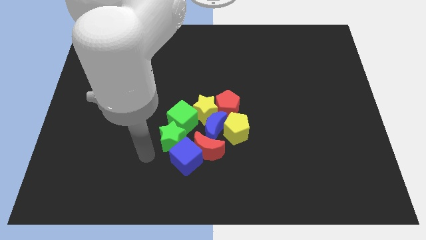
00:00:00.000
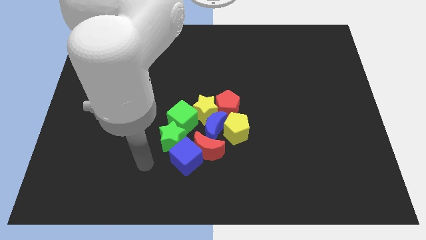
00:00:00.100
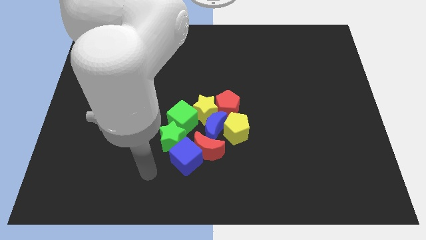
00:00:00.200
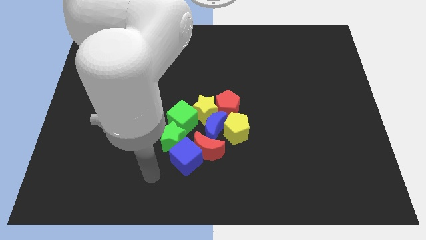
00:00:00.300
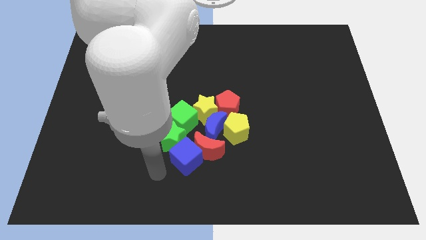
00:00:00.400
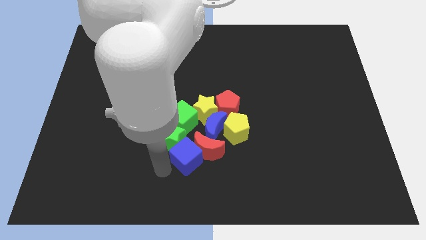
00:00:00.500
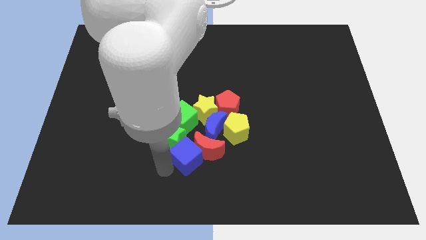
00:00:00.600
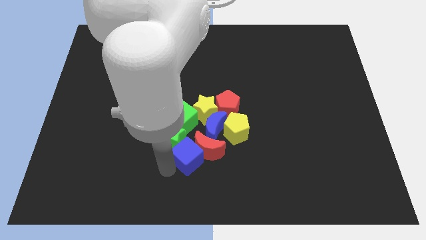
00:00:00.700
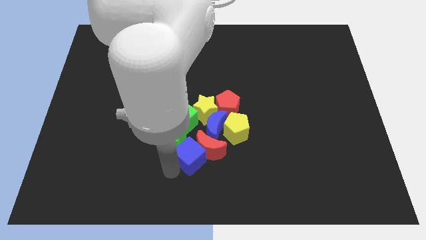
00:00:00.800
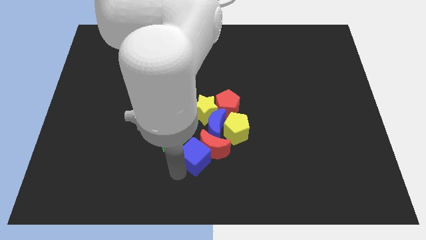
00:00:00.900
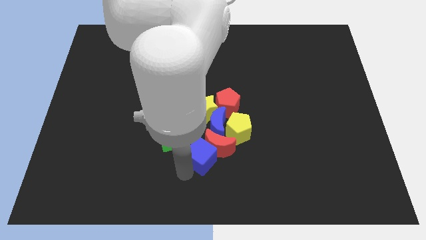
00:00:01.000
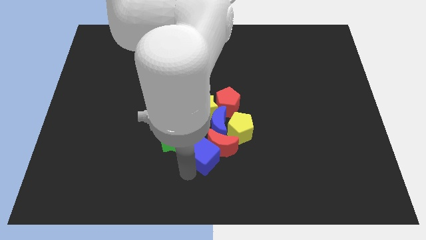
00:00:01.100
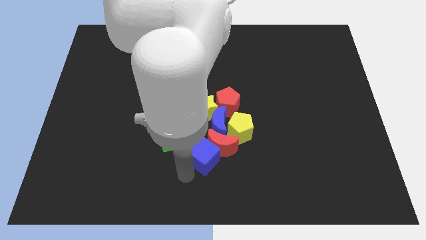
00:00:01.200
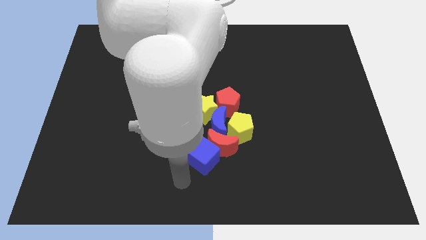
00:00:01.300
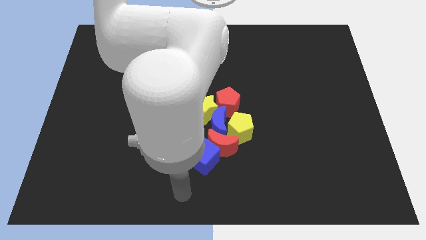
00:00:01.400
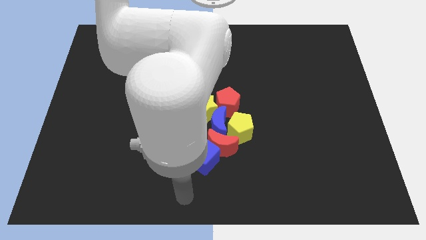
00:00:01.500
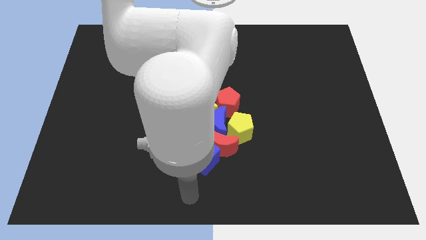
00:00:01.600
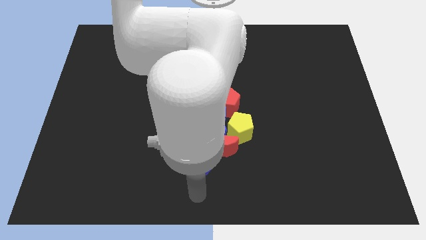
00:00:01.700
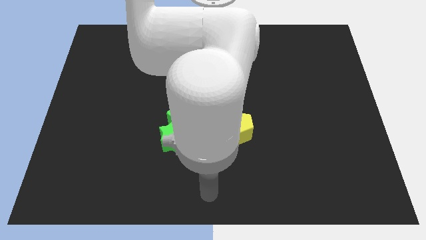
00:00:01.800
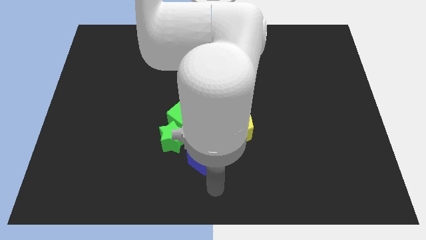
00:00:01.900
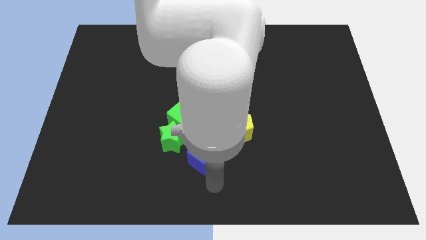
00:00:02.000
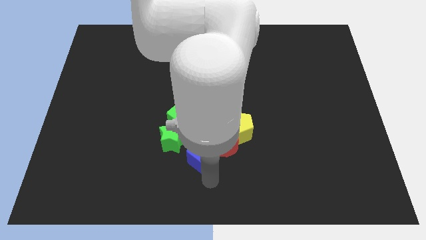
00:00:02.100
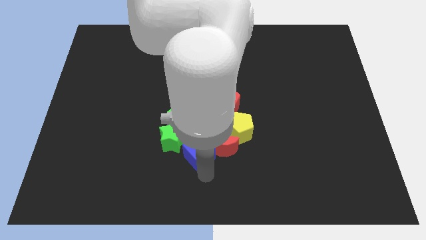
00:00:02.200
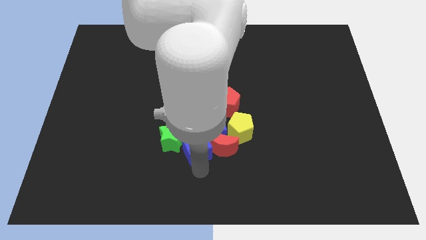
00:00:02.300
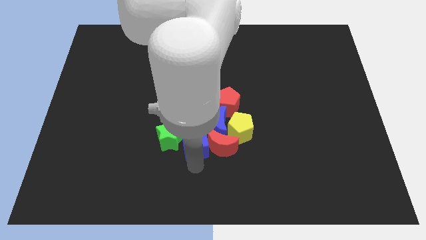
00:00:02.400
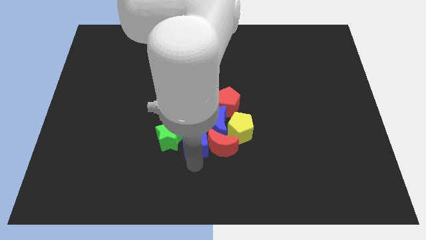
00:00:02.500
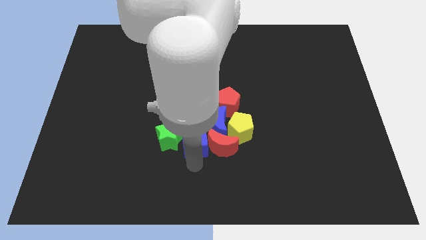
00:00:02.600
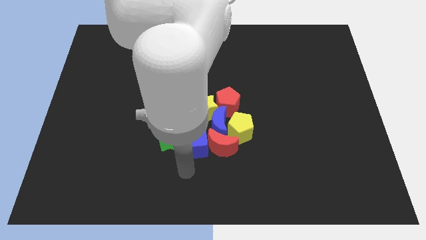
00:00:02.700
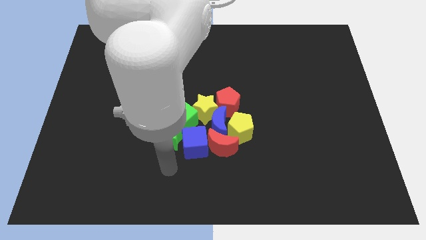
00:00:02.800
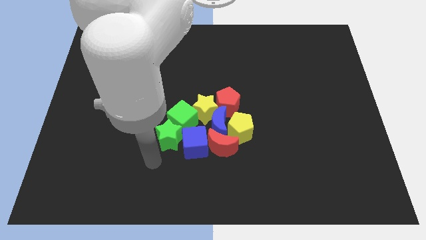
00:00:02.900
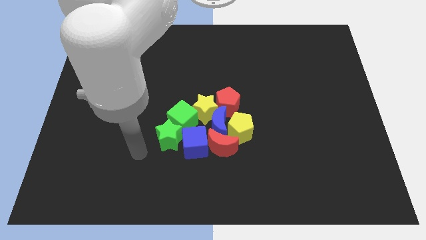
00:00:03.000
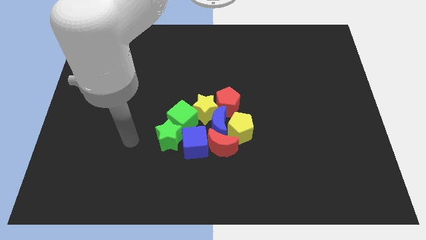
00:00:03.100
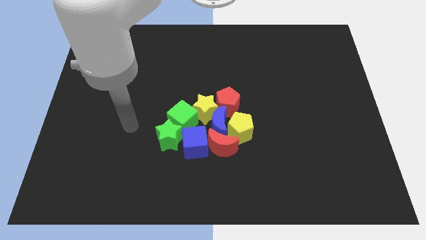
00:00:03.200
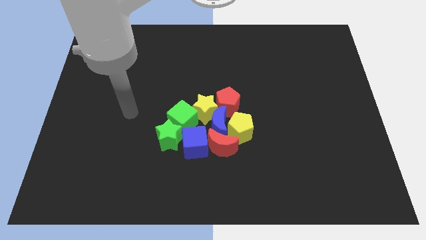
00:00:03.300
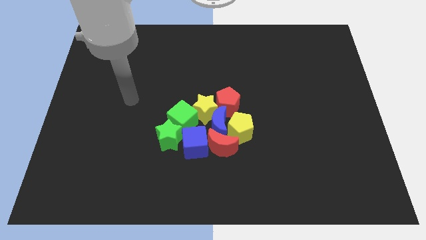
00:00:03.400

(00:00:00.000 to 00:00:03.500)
slide the blue cube slightly towards into group of blocks

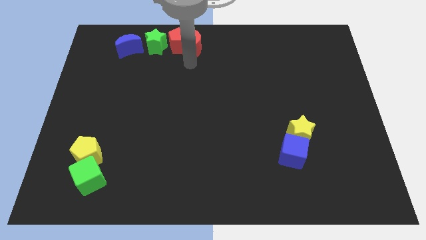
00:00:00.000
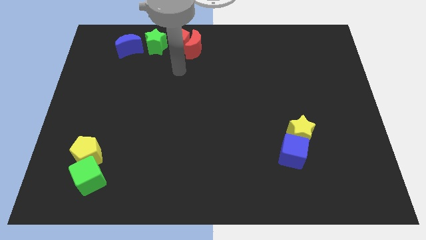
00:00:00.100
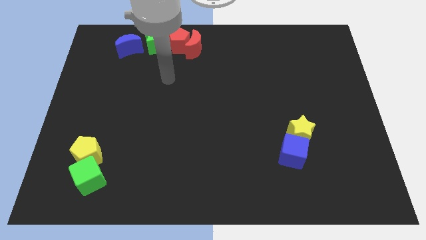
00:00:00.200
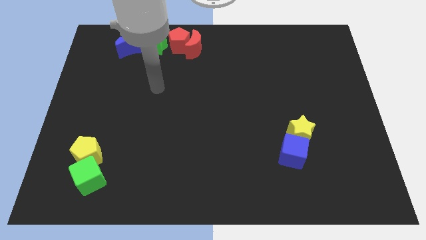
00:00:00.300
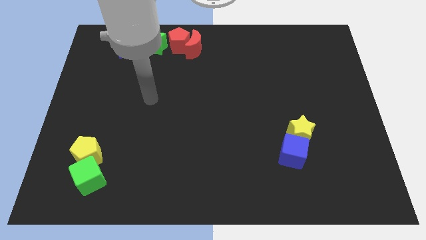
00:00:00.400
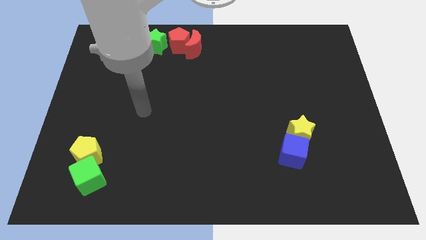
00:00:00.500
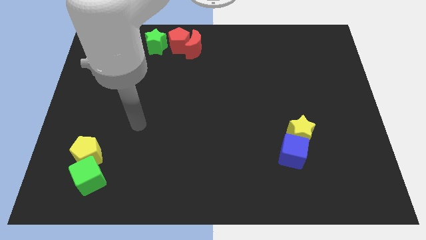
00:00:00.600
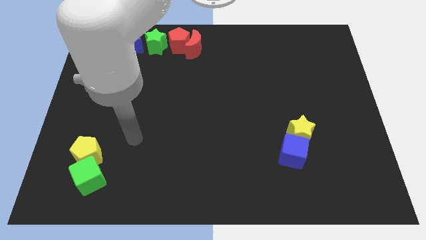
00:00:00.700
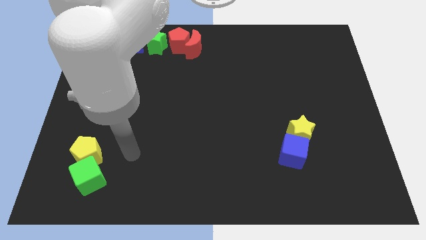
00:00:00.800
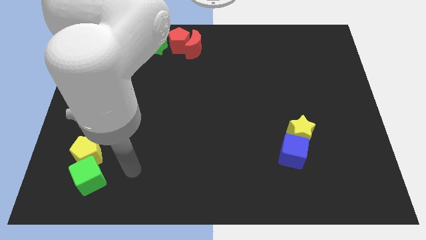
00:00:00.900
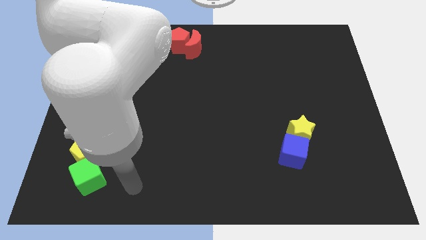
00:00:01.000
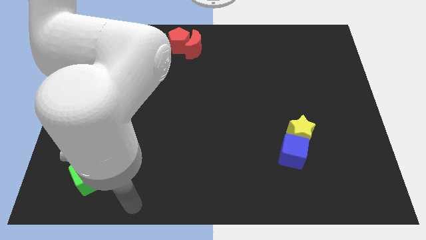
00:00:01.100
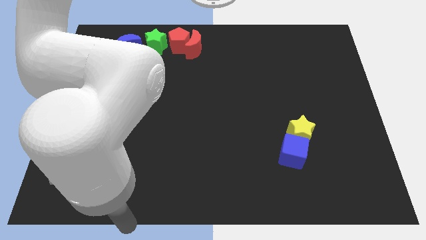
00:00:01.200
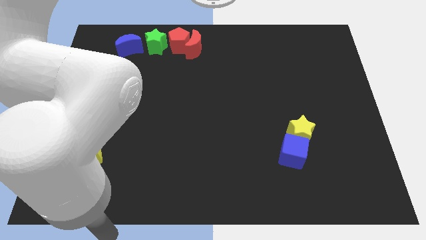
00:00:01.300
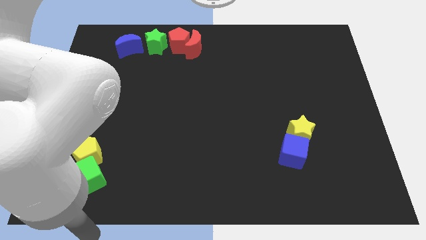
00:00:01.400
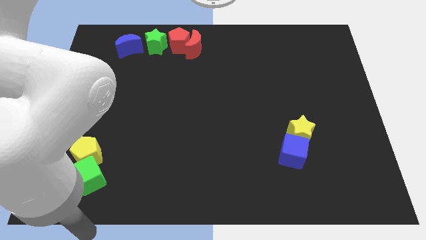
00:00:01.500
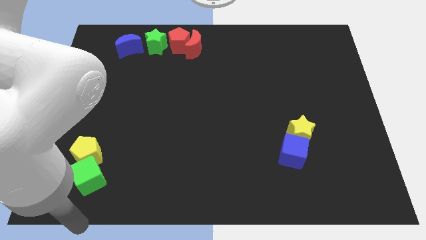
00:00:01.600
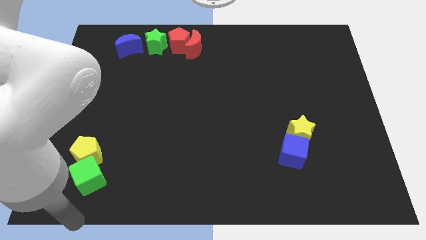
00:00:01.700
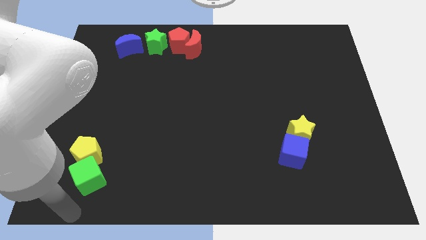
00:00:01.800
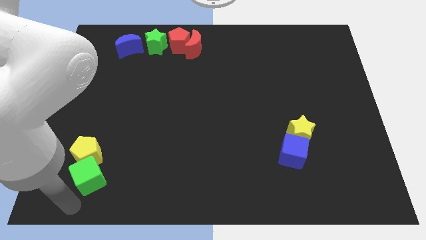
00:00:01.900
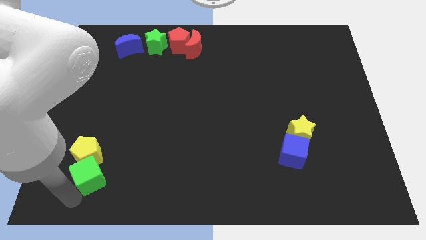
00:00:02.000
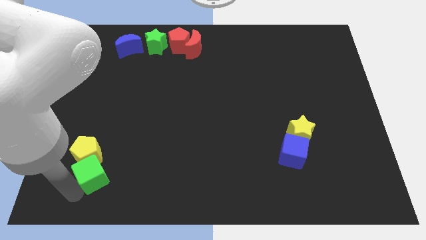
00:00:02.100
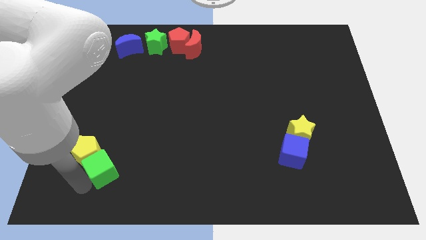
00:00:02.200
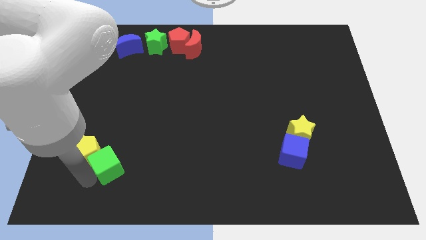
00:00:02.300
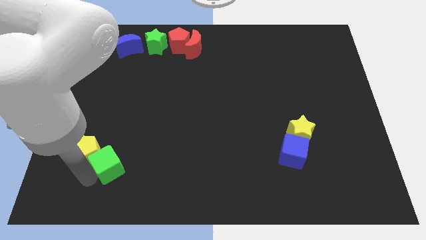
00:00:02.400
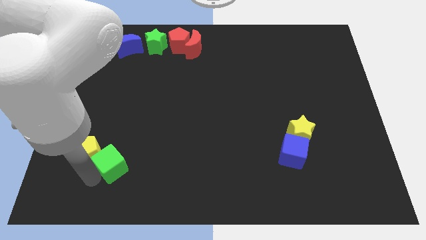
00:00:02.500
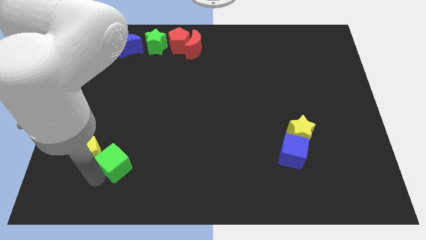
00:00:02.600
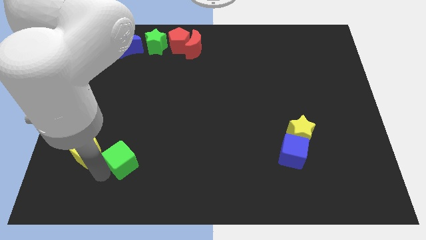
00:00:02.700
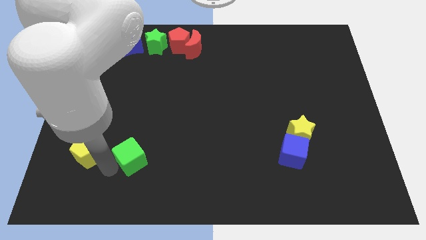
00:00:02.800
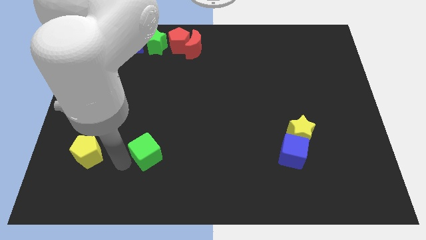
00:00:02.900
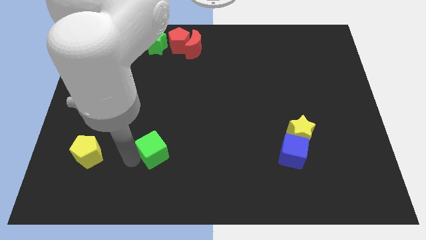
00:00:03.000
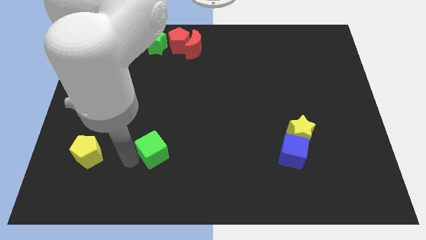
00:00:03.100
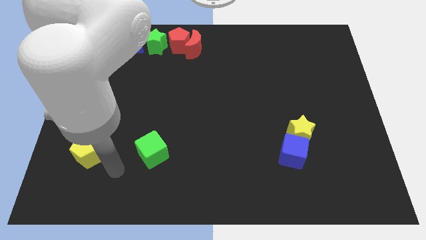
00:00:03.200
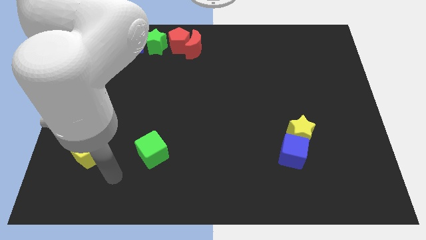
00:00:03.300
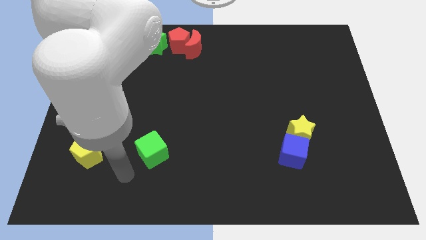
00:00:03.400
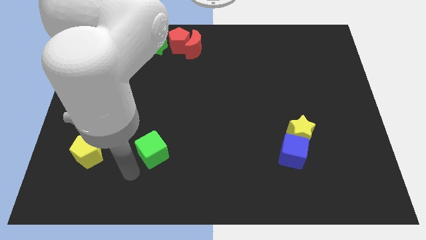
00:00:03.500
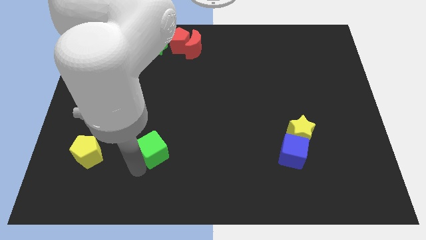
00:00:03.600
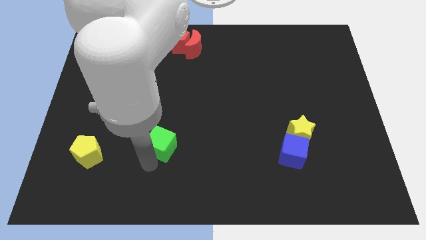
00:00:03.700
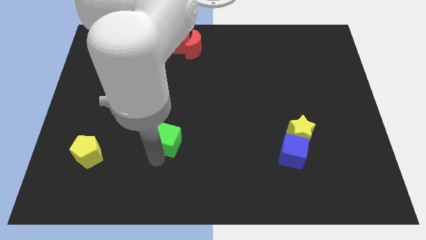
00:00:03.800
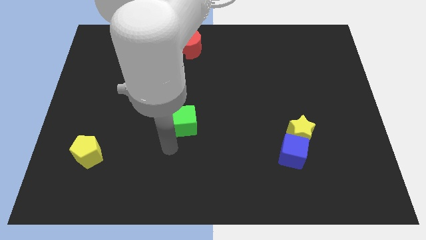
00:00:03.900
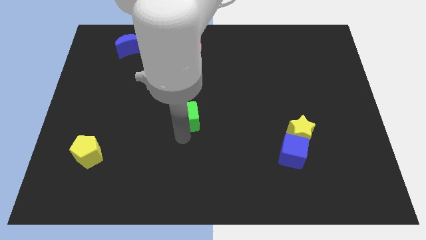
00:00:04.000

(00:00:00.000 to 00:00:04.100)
separate the green cube from the yellow pentagon

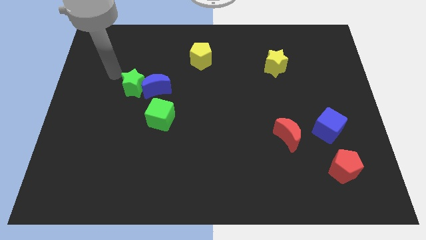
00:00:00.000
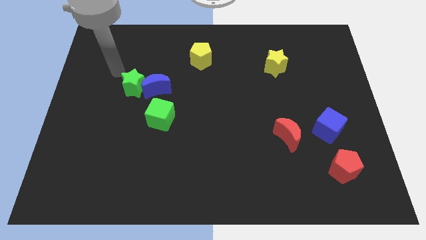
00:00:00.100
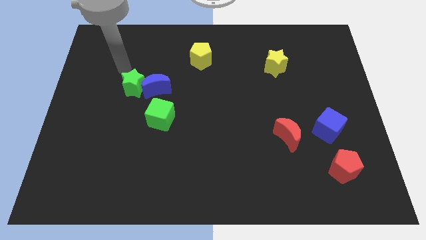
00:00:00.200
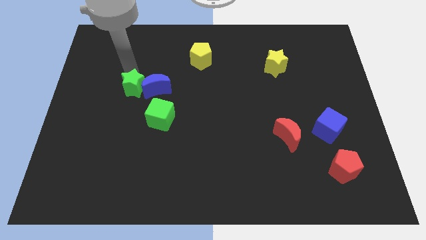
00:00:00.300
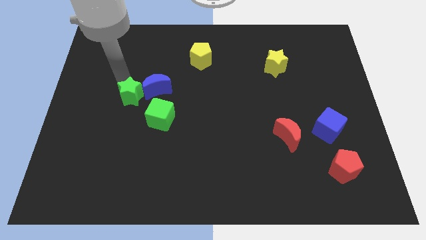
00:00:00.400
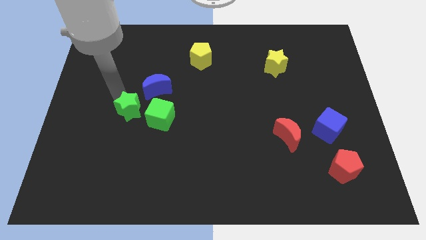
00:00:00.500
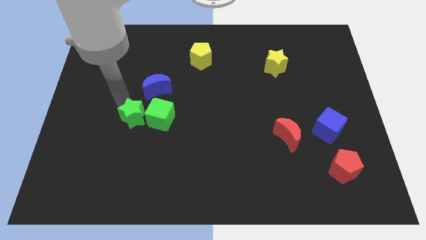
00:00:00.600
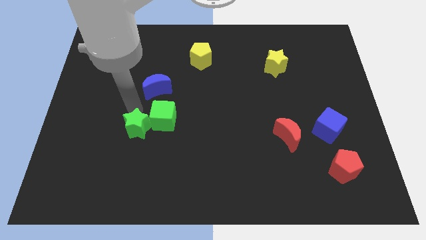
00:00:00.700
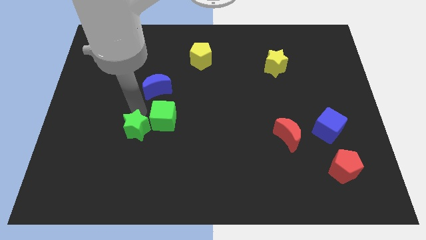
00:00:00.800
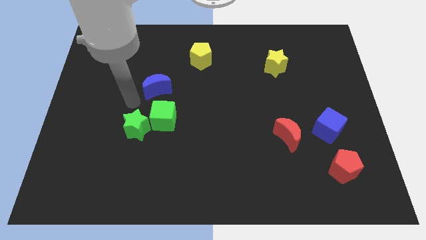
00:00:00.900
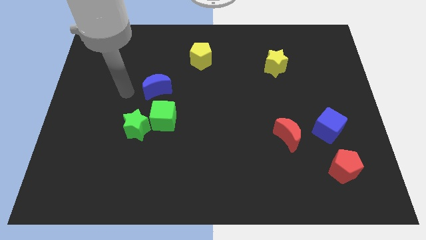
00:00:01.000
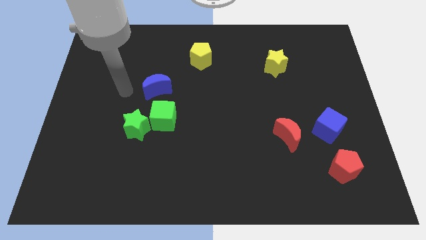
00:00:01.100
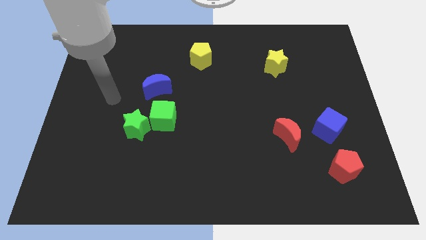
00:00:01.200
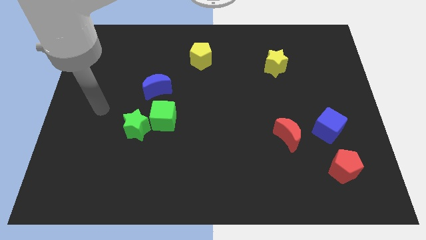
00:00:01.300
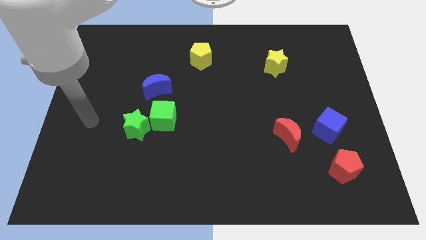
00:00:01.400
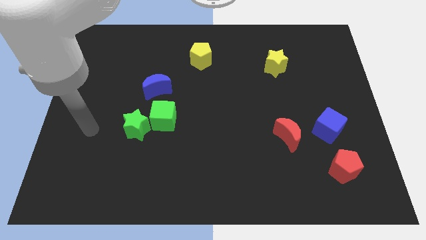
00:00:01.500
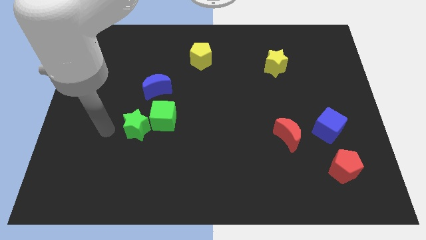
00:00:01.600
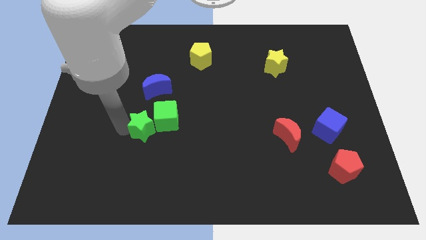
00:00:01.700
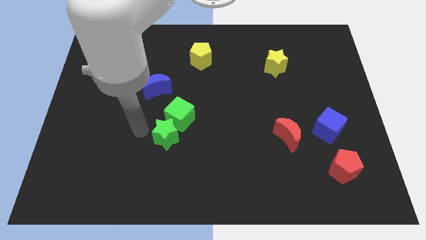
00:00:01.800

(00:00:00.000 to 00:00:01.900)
drag the green star to the bottom left of the green cube
